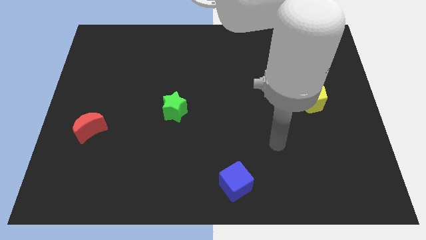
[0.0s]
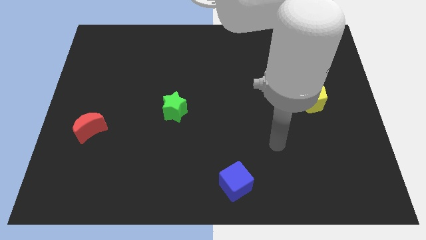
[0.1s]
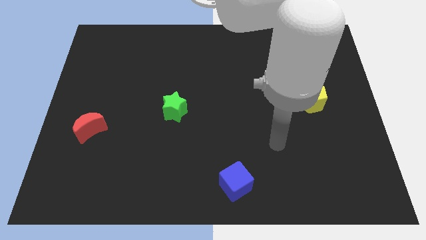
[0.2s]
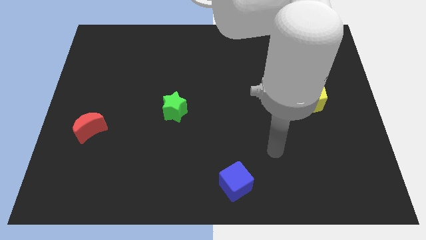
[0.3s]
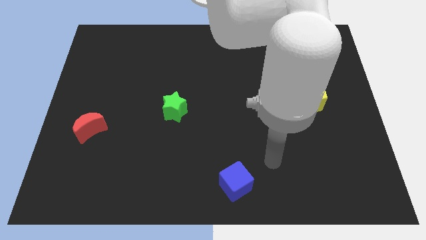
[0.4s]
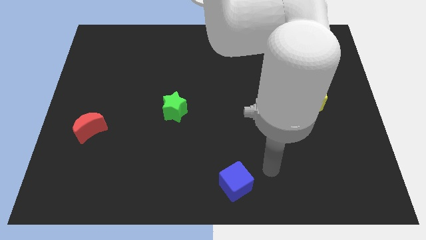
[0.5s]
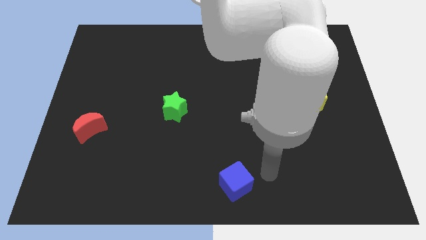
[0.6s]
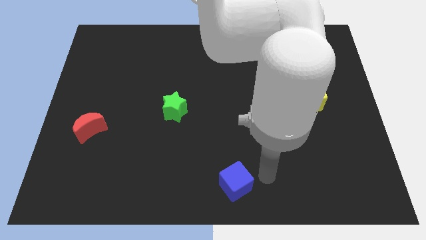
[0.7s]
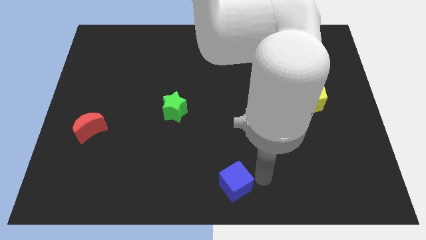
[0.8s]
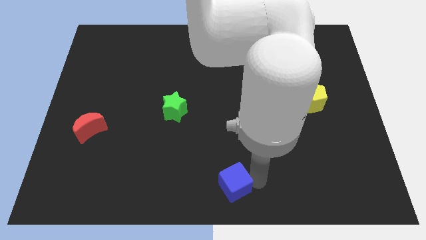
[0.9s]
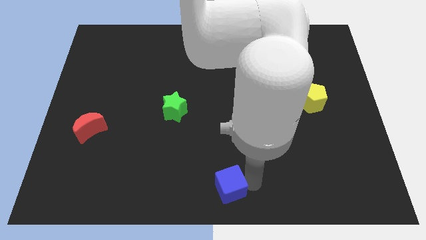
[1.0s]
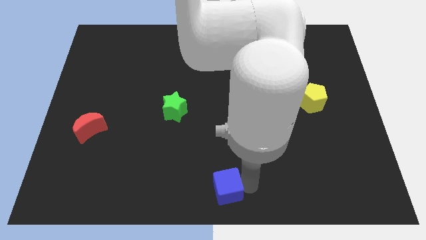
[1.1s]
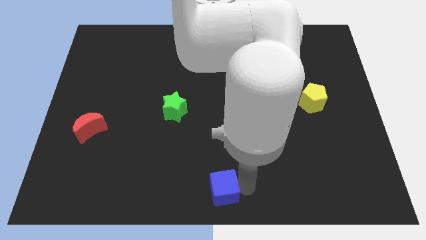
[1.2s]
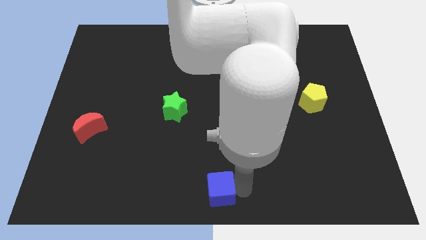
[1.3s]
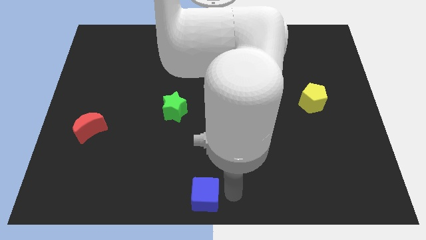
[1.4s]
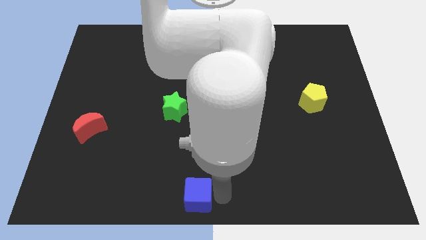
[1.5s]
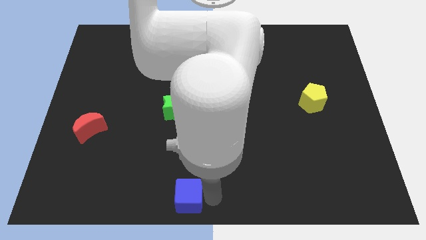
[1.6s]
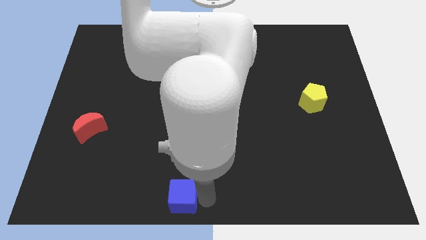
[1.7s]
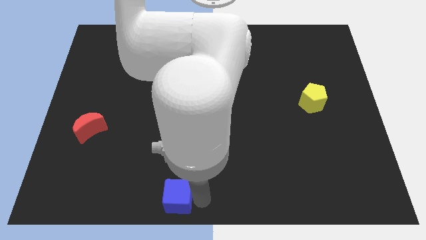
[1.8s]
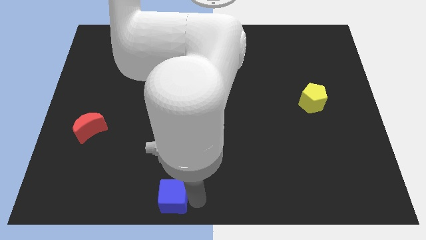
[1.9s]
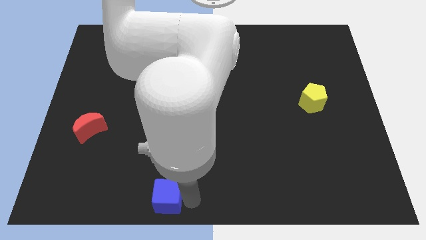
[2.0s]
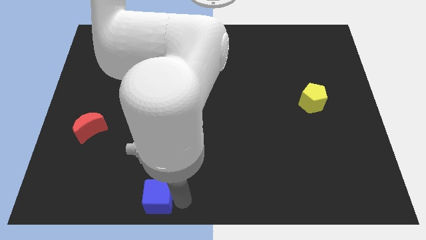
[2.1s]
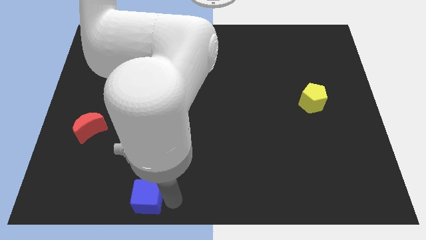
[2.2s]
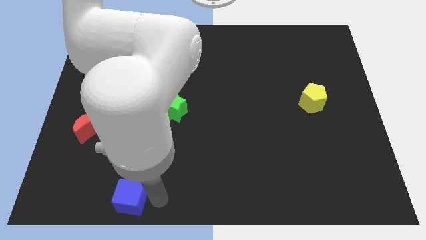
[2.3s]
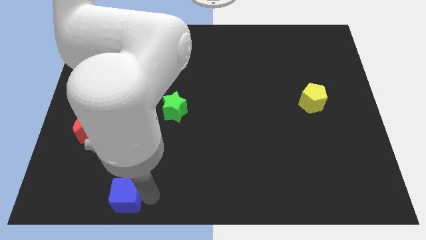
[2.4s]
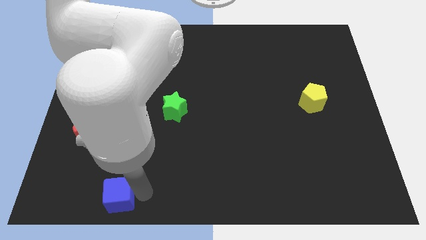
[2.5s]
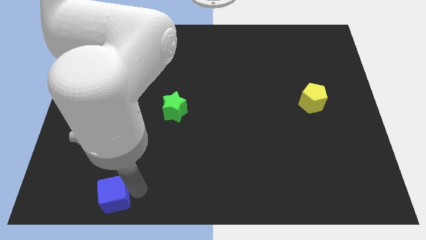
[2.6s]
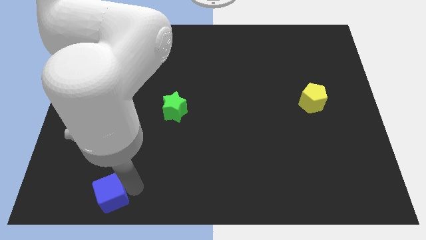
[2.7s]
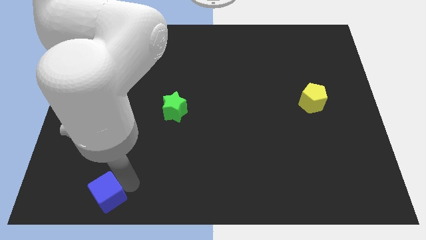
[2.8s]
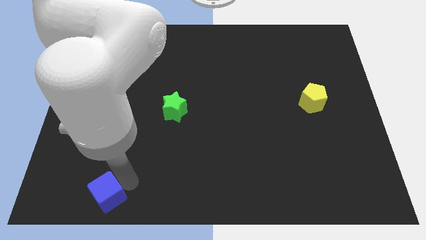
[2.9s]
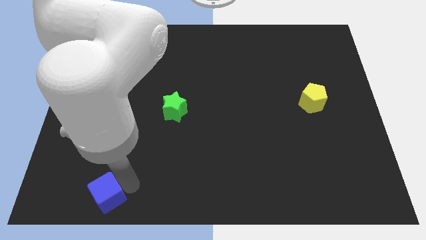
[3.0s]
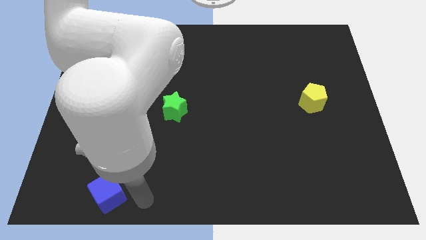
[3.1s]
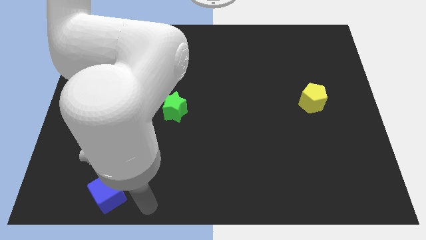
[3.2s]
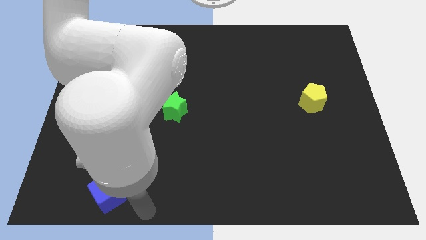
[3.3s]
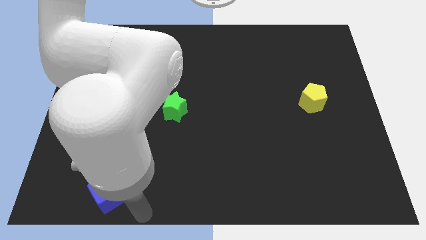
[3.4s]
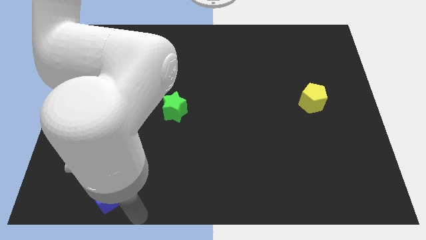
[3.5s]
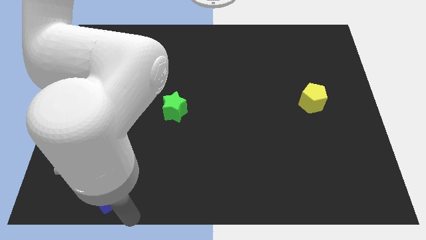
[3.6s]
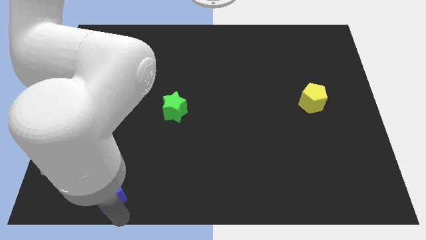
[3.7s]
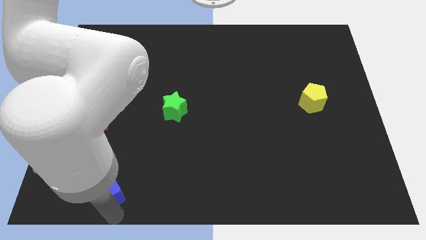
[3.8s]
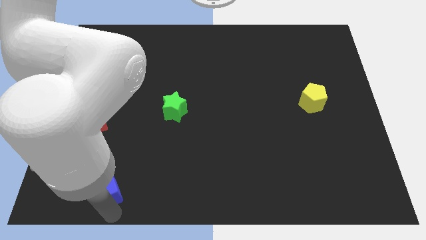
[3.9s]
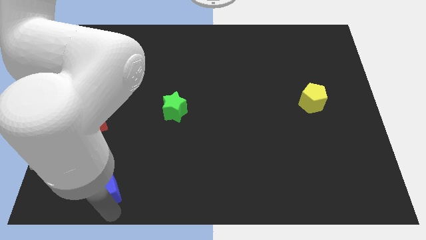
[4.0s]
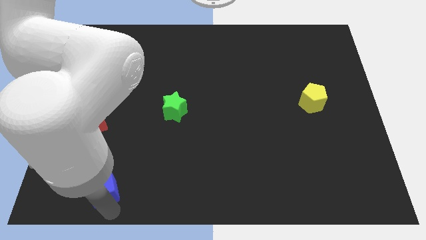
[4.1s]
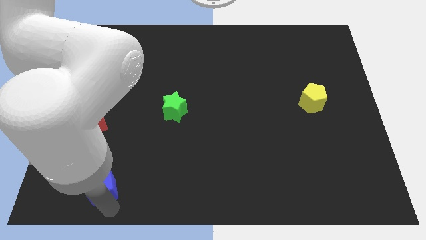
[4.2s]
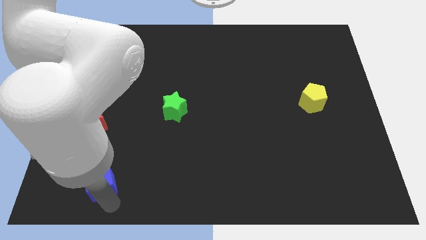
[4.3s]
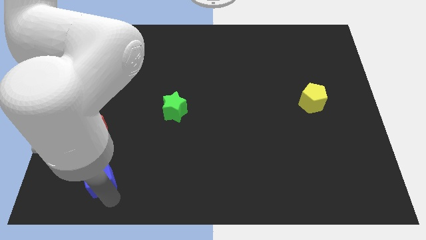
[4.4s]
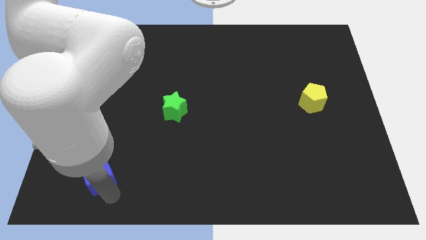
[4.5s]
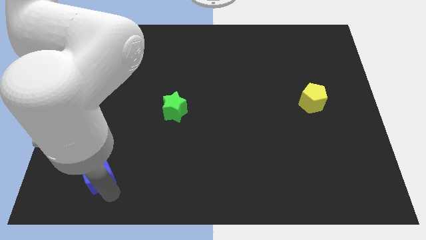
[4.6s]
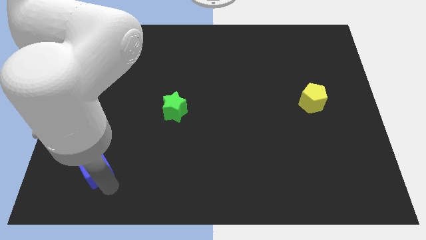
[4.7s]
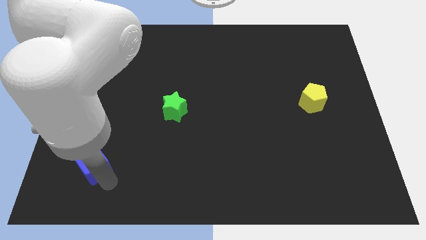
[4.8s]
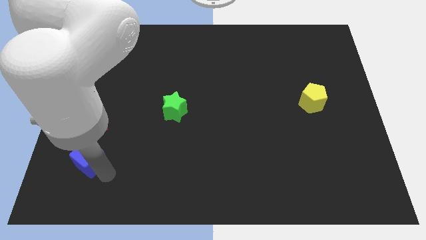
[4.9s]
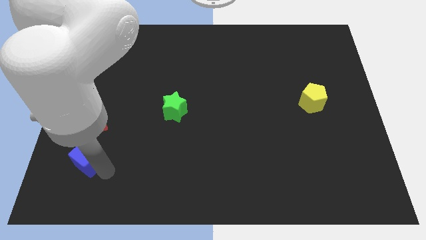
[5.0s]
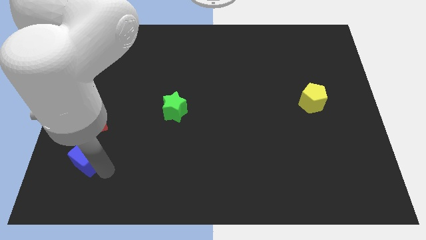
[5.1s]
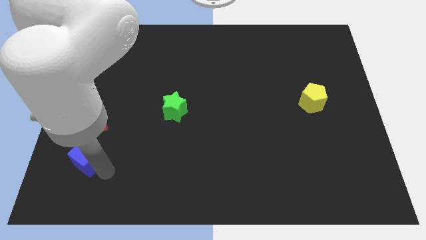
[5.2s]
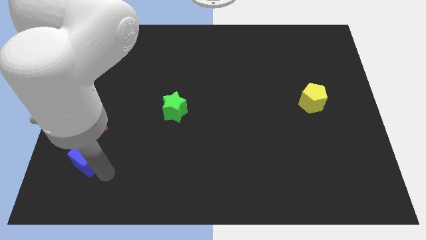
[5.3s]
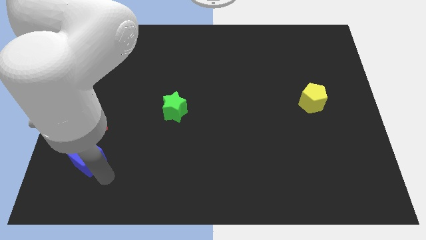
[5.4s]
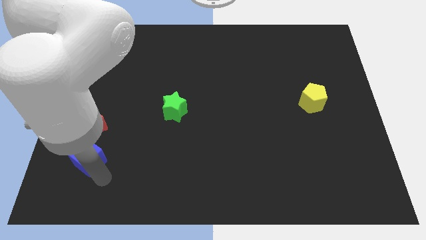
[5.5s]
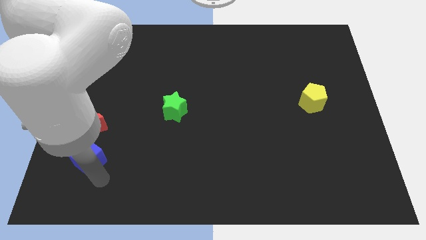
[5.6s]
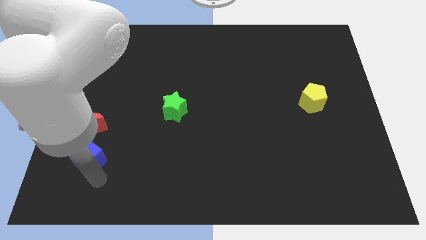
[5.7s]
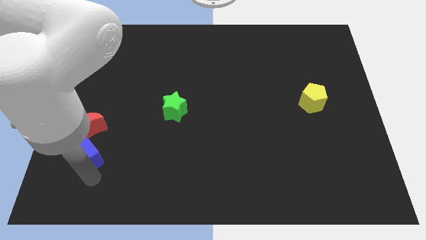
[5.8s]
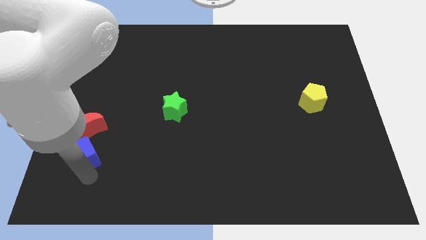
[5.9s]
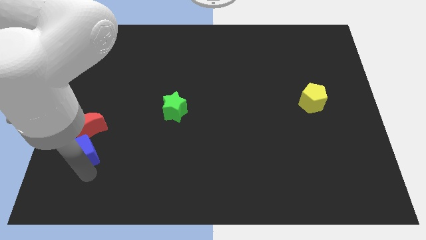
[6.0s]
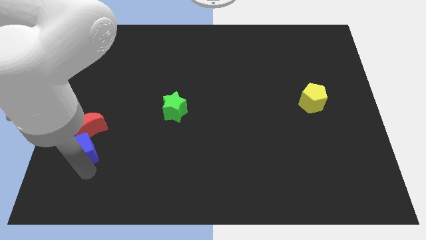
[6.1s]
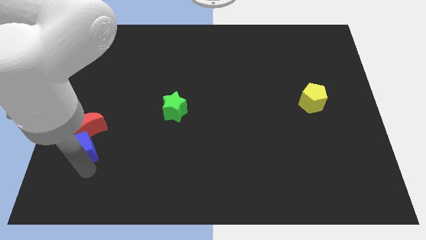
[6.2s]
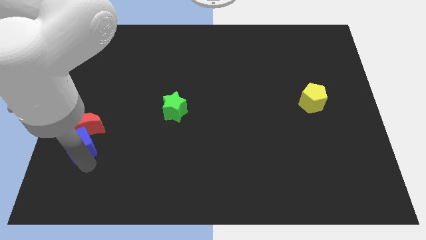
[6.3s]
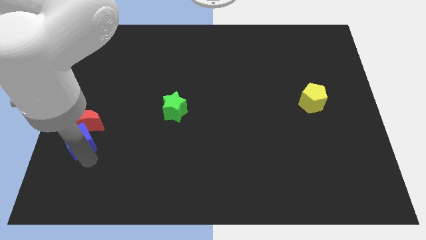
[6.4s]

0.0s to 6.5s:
put the cube towards the red block

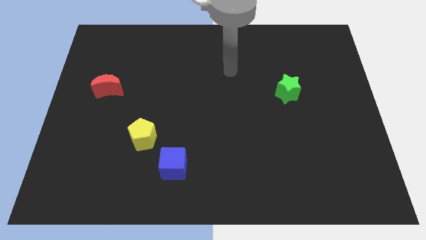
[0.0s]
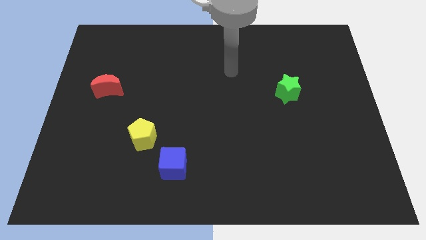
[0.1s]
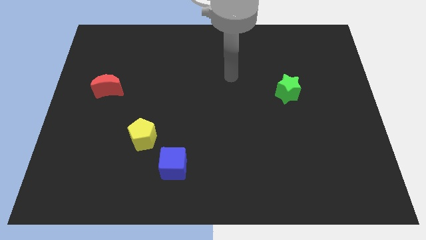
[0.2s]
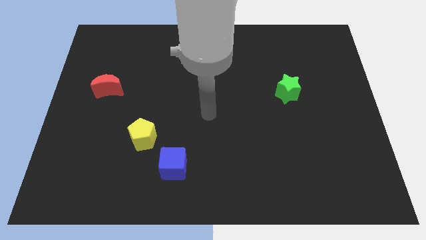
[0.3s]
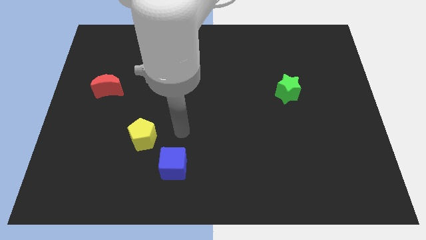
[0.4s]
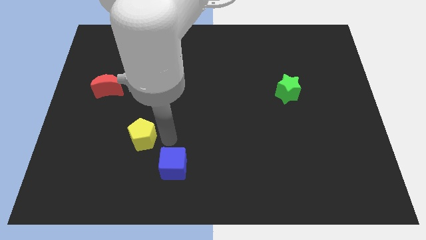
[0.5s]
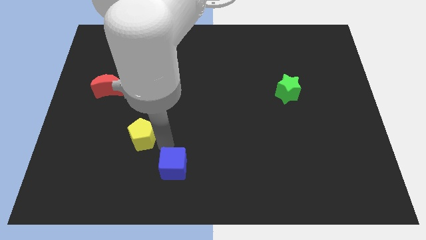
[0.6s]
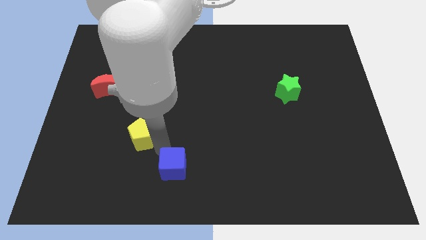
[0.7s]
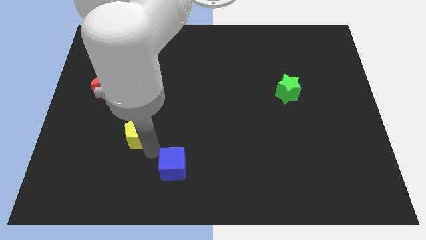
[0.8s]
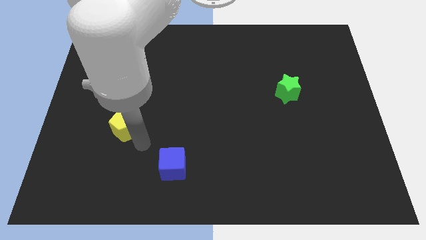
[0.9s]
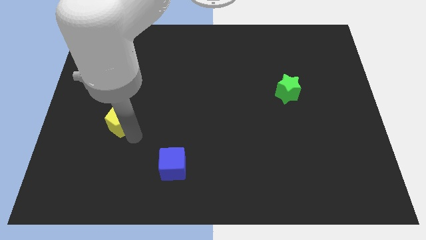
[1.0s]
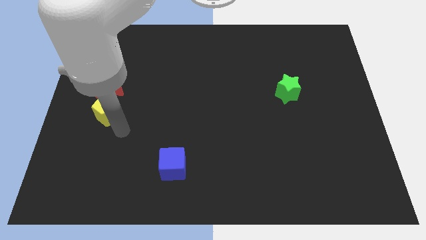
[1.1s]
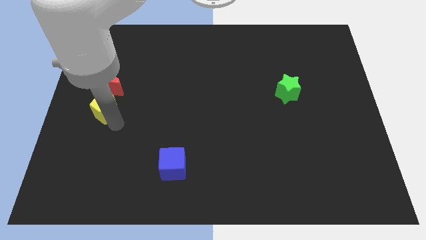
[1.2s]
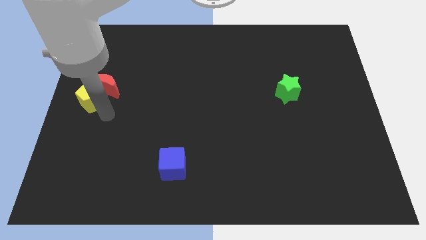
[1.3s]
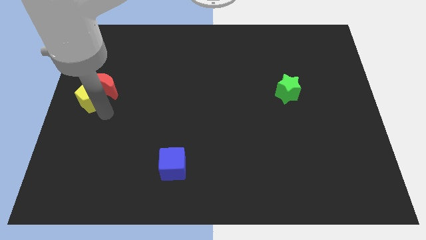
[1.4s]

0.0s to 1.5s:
push the pentagon to the moon

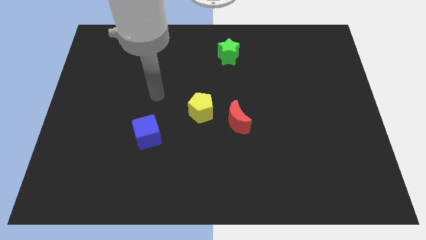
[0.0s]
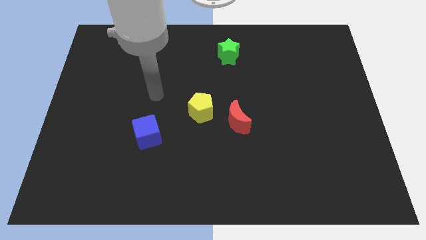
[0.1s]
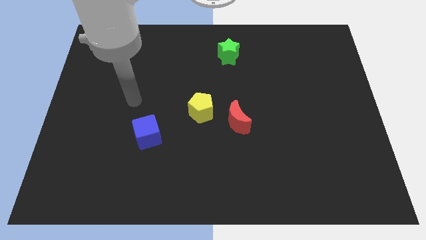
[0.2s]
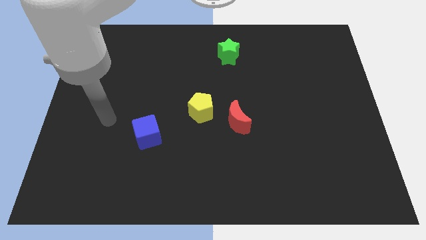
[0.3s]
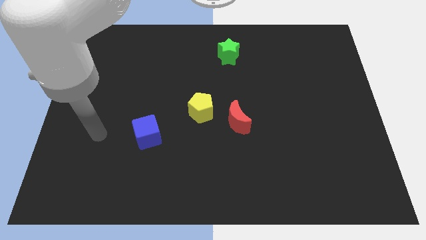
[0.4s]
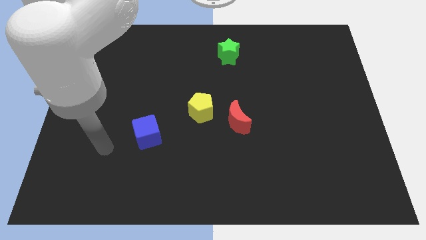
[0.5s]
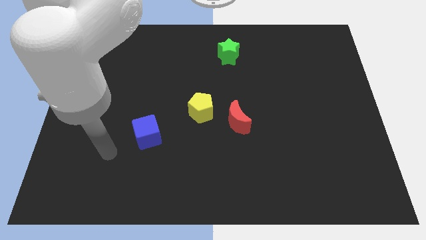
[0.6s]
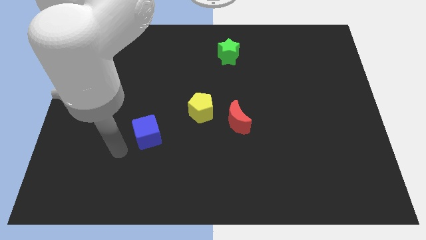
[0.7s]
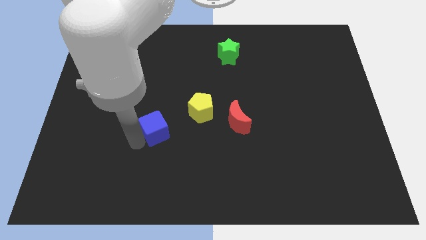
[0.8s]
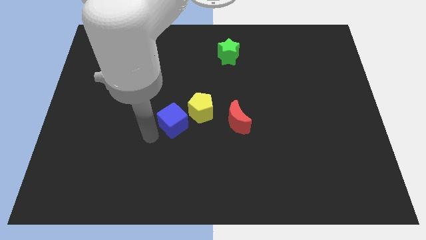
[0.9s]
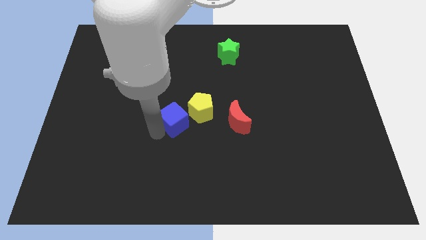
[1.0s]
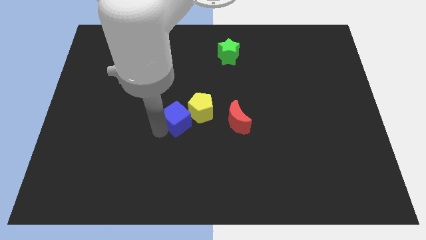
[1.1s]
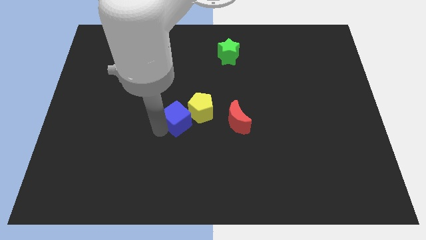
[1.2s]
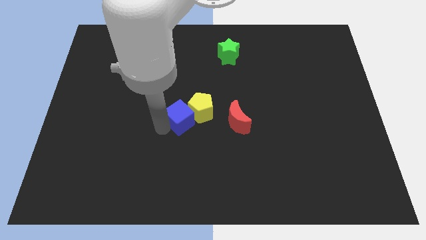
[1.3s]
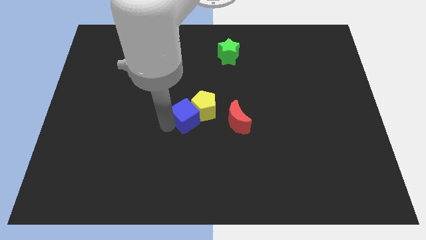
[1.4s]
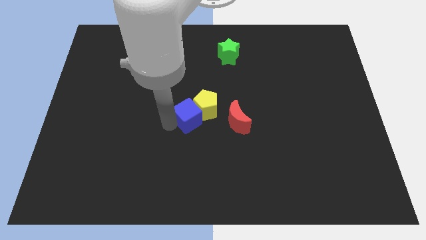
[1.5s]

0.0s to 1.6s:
push the blue block to the pentagon
